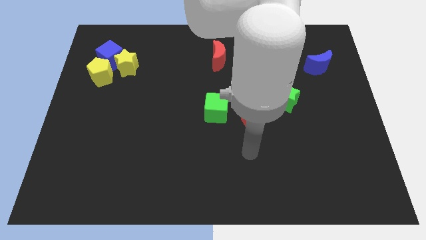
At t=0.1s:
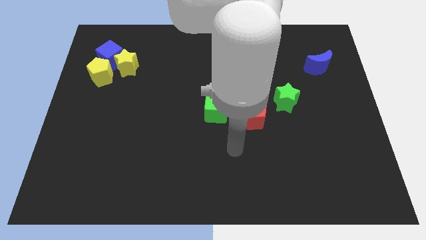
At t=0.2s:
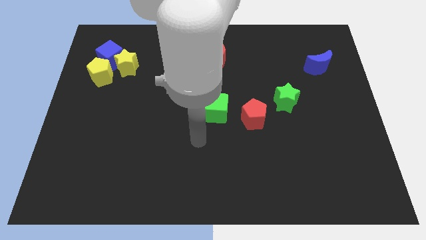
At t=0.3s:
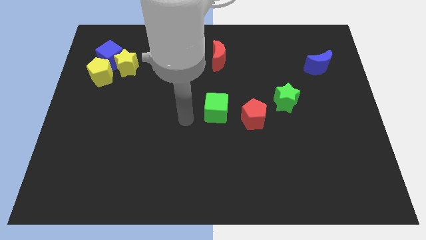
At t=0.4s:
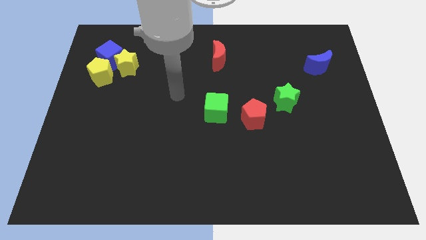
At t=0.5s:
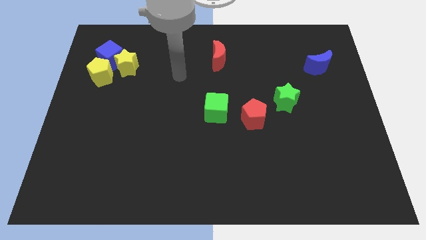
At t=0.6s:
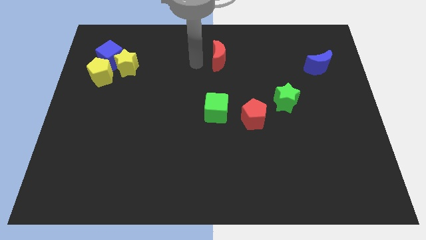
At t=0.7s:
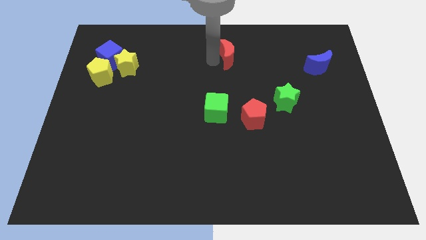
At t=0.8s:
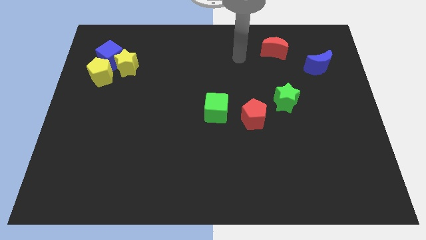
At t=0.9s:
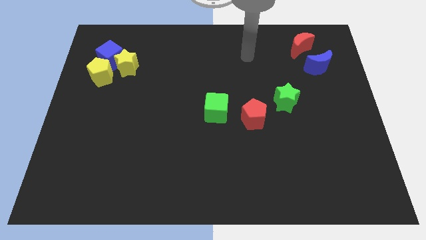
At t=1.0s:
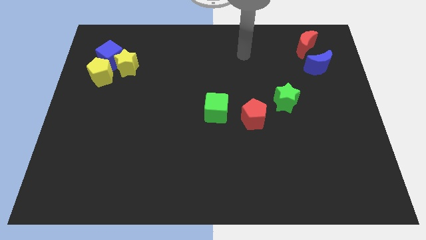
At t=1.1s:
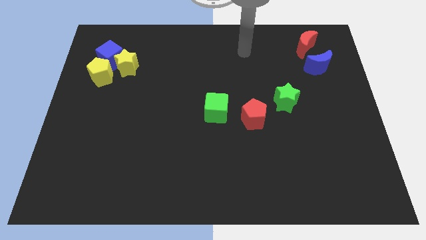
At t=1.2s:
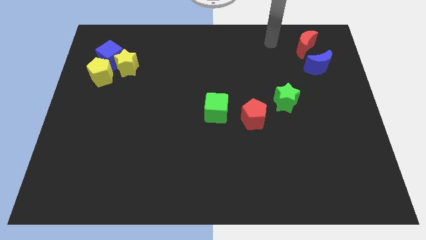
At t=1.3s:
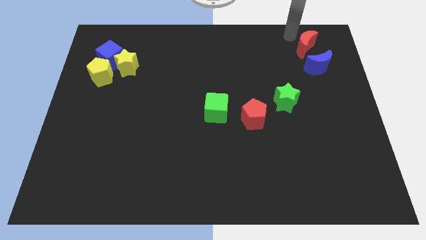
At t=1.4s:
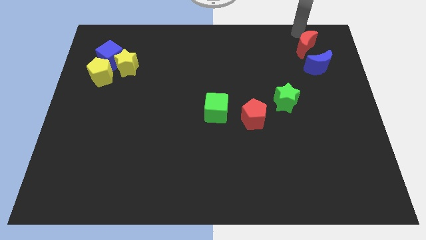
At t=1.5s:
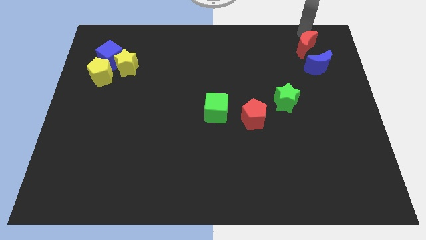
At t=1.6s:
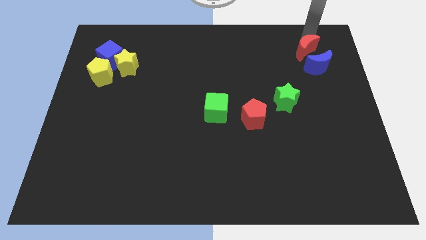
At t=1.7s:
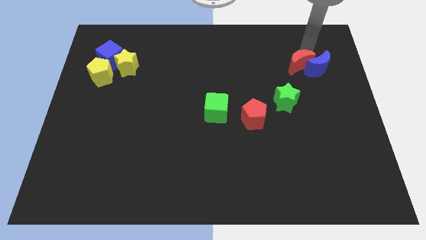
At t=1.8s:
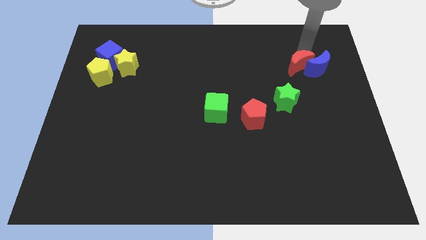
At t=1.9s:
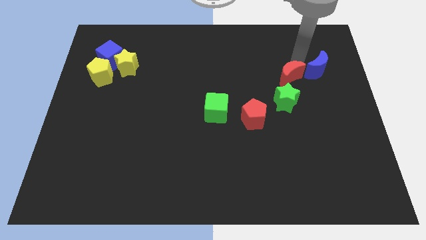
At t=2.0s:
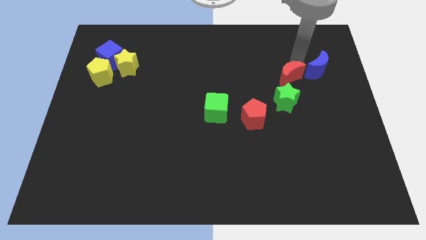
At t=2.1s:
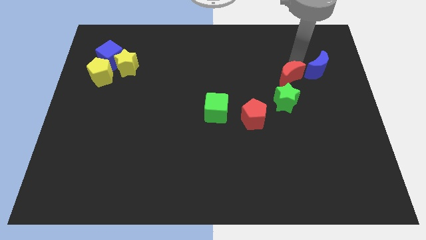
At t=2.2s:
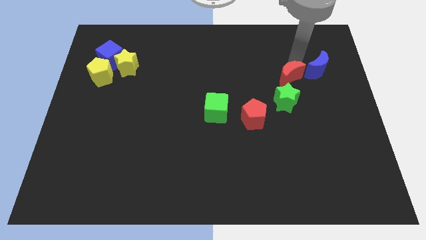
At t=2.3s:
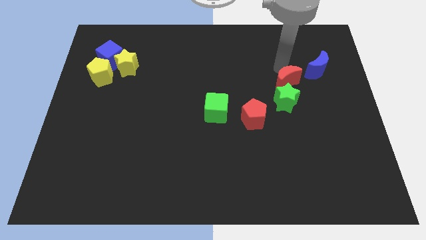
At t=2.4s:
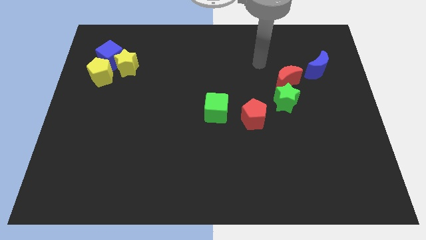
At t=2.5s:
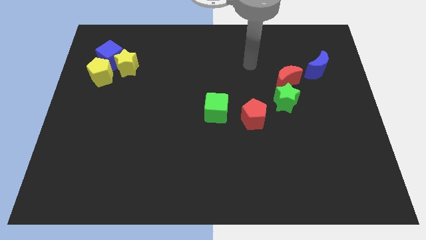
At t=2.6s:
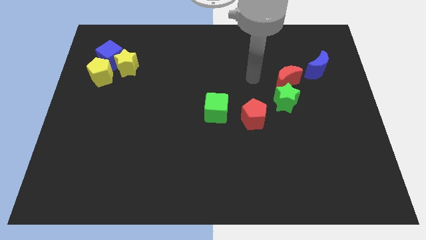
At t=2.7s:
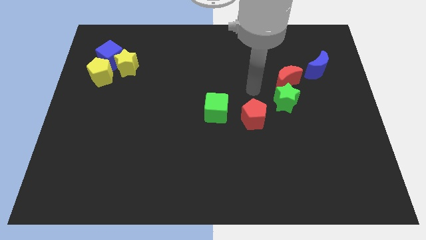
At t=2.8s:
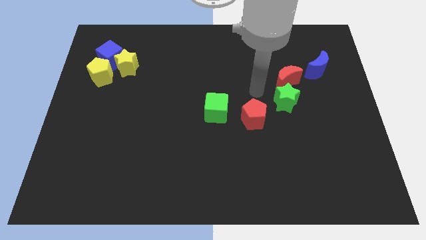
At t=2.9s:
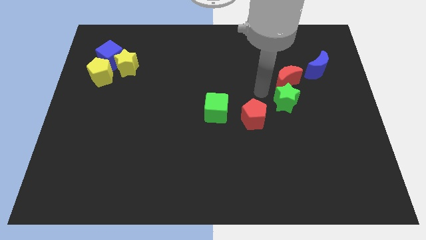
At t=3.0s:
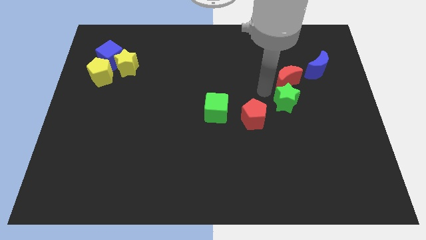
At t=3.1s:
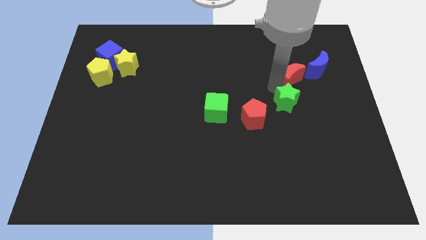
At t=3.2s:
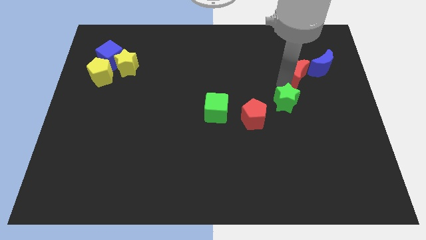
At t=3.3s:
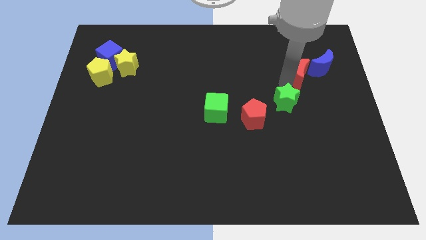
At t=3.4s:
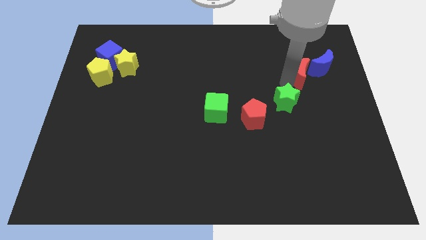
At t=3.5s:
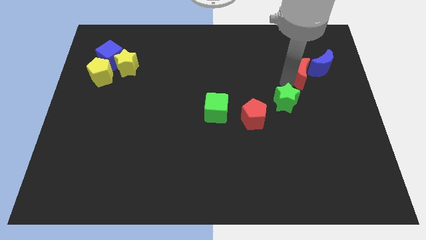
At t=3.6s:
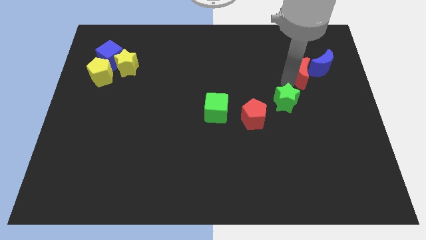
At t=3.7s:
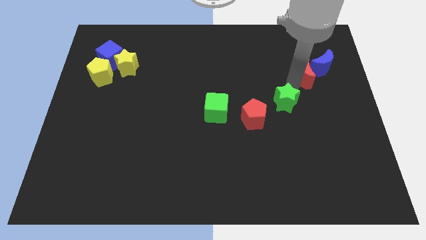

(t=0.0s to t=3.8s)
push the red moon towards the blue moon

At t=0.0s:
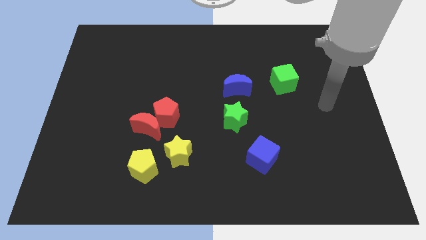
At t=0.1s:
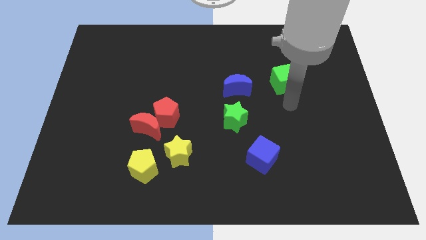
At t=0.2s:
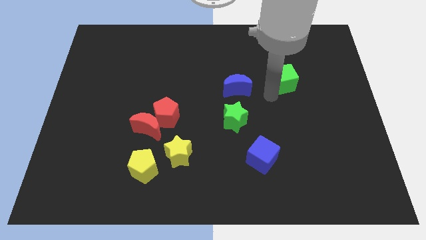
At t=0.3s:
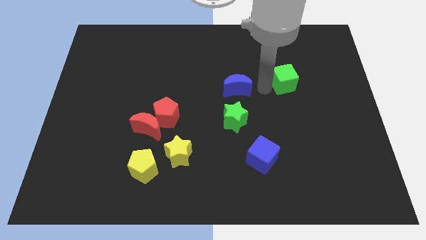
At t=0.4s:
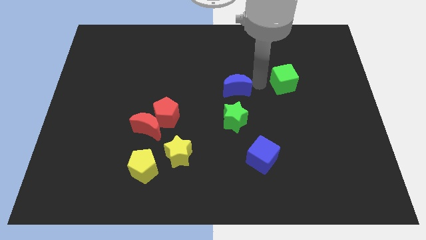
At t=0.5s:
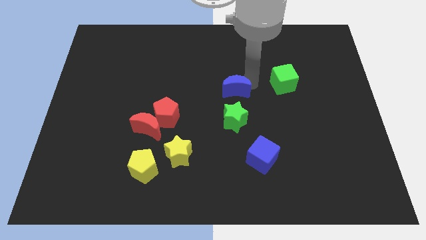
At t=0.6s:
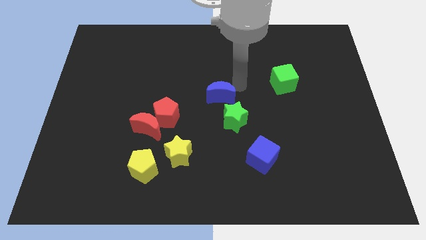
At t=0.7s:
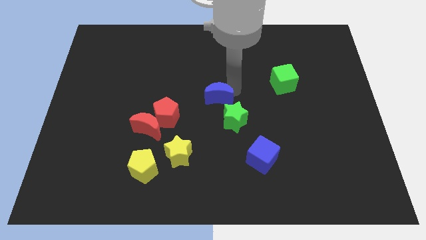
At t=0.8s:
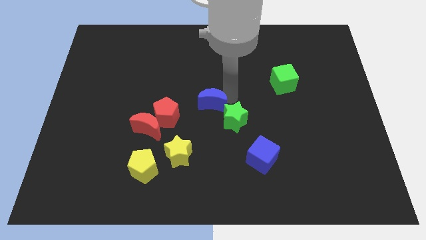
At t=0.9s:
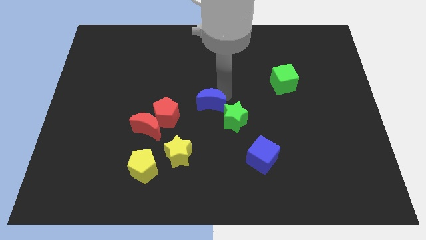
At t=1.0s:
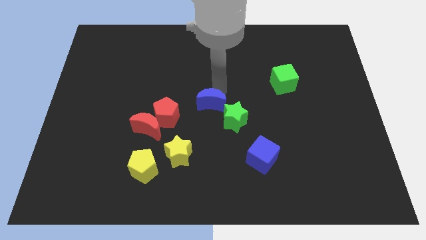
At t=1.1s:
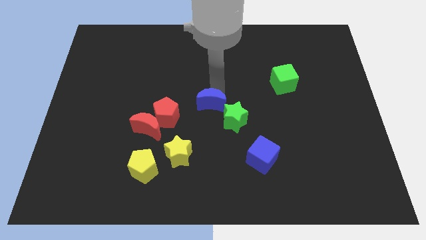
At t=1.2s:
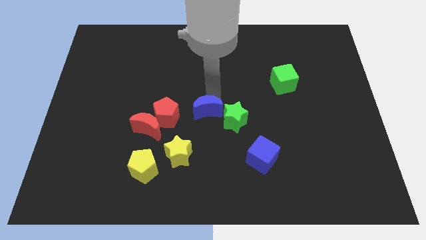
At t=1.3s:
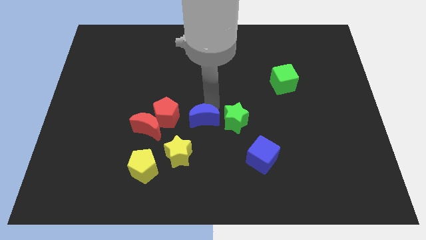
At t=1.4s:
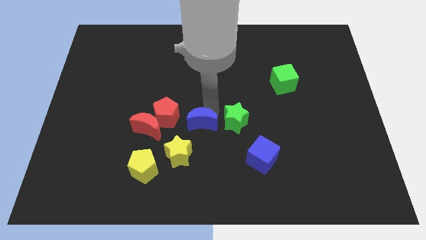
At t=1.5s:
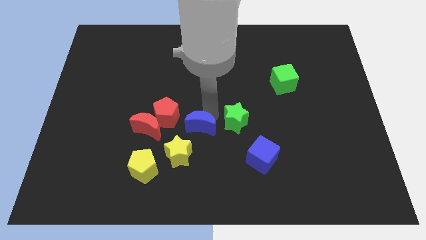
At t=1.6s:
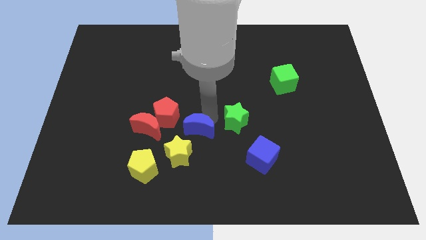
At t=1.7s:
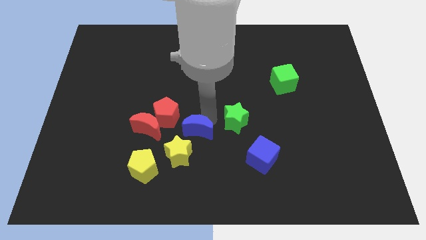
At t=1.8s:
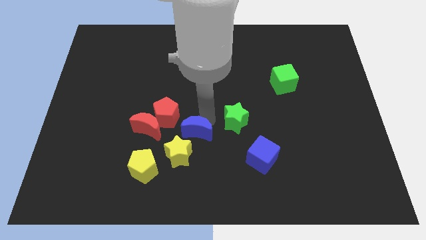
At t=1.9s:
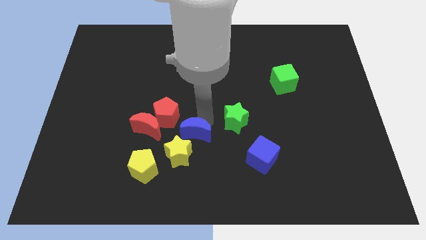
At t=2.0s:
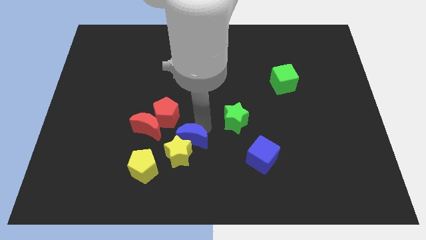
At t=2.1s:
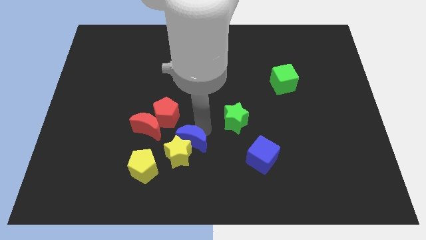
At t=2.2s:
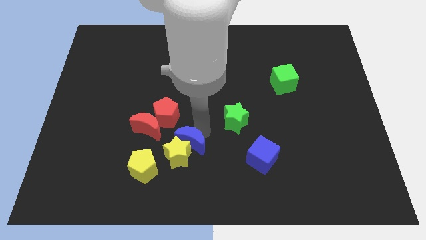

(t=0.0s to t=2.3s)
slide the blue moon towards the yellow star

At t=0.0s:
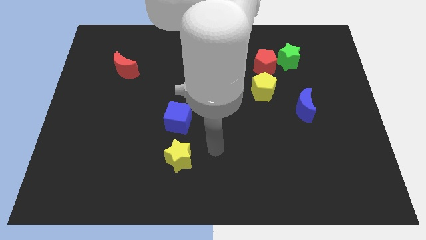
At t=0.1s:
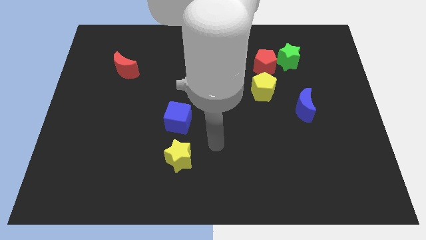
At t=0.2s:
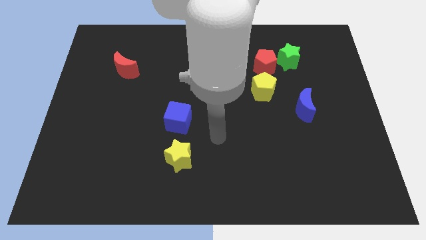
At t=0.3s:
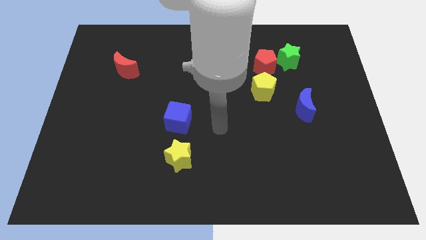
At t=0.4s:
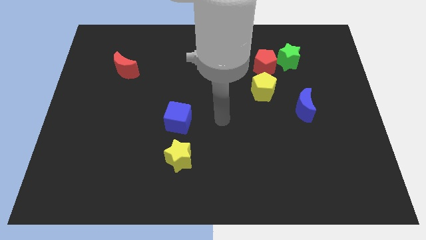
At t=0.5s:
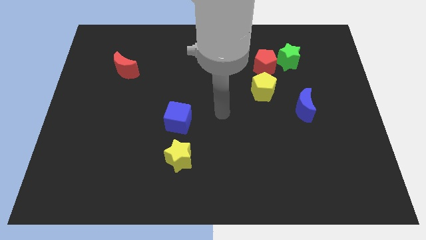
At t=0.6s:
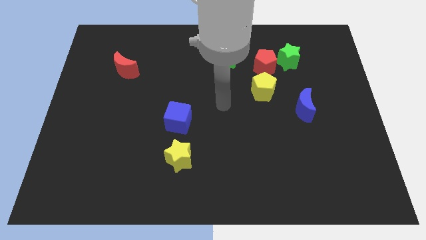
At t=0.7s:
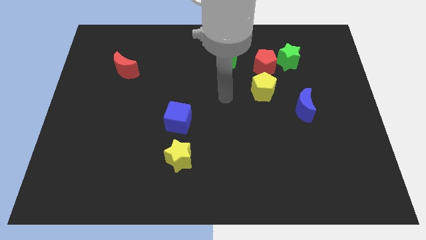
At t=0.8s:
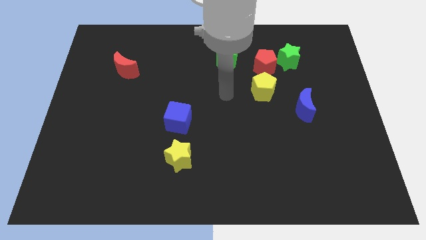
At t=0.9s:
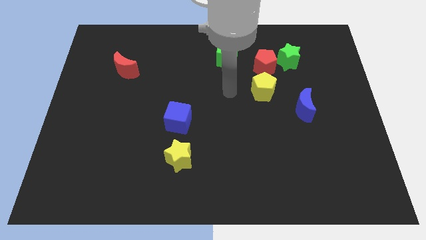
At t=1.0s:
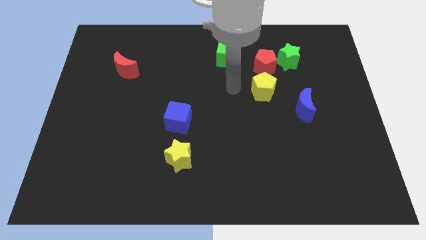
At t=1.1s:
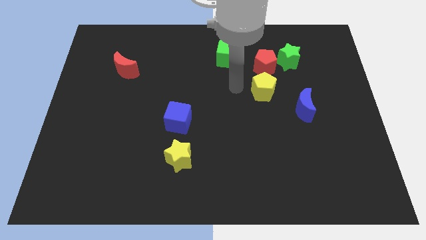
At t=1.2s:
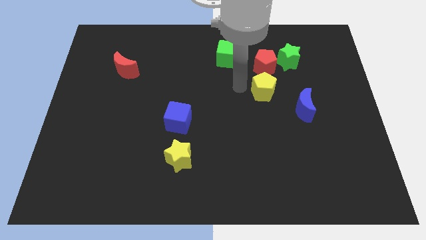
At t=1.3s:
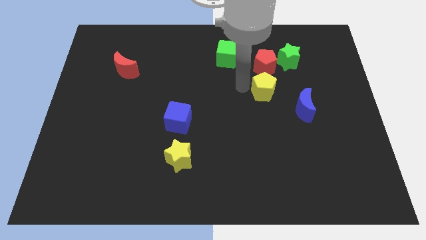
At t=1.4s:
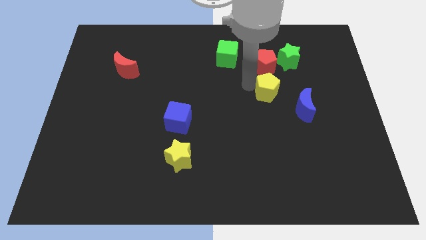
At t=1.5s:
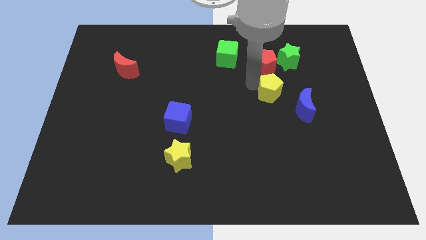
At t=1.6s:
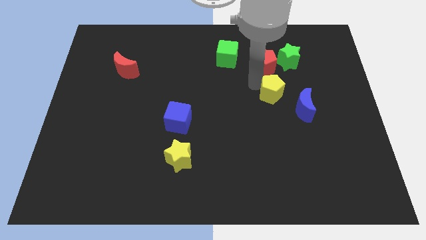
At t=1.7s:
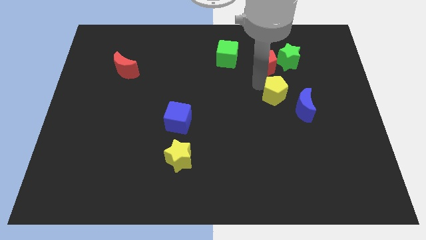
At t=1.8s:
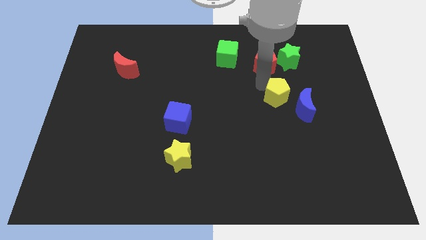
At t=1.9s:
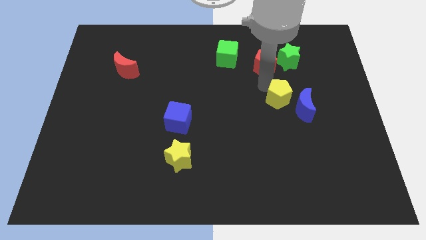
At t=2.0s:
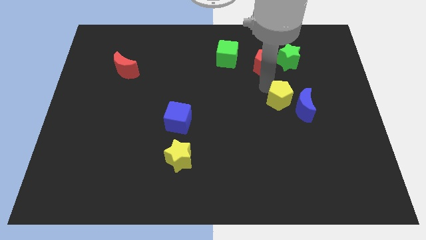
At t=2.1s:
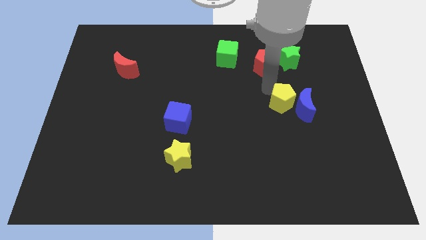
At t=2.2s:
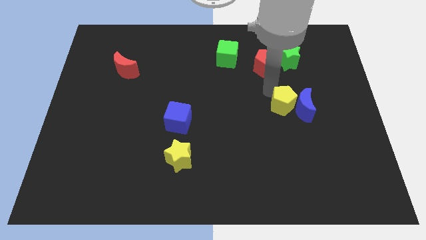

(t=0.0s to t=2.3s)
slide the yellow pentagon close to the blue moon
